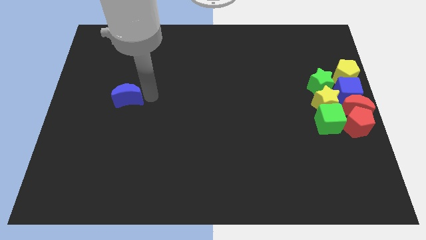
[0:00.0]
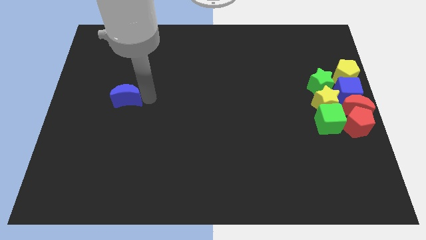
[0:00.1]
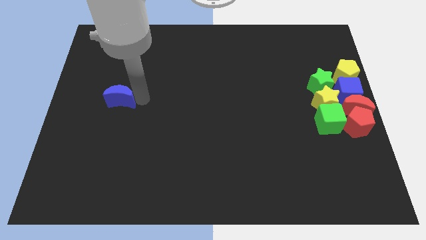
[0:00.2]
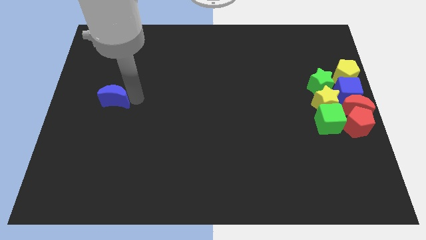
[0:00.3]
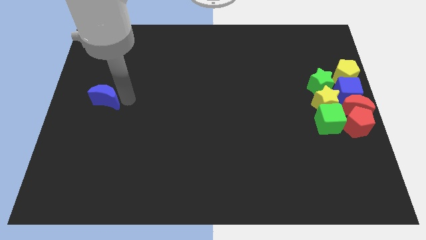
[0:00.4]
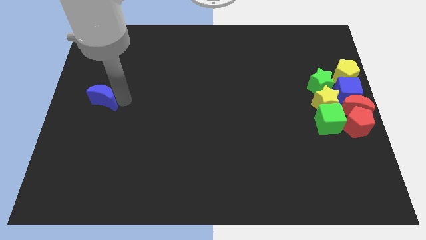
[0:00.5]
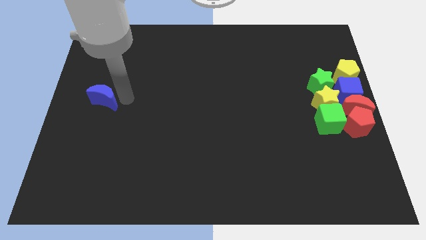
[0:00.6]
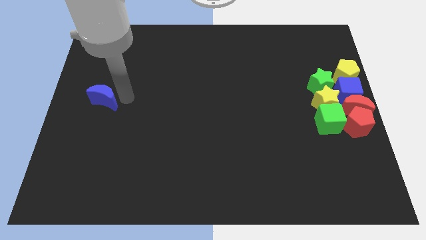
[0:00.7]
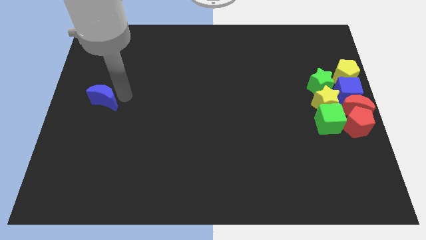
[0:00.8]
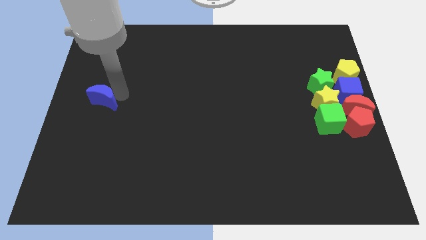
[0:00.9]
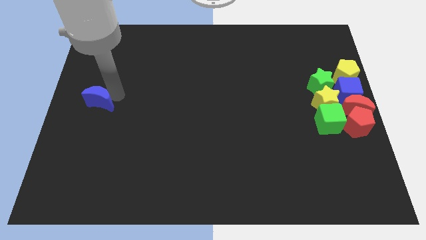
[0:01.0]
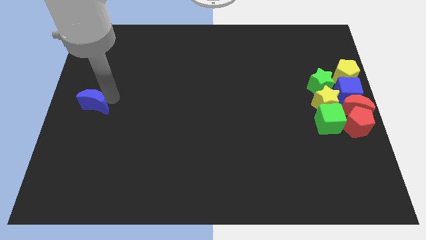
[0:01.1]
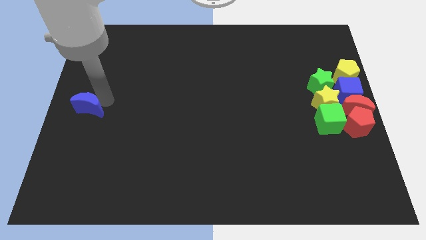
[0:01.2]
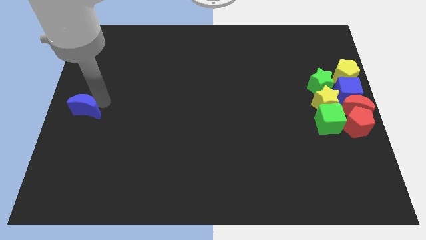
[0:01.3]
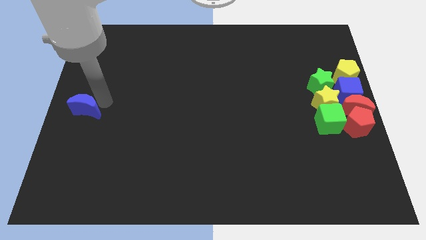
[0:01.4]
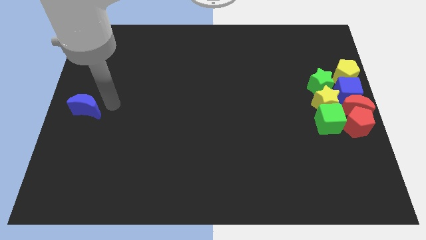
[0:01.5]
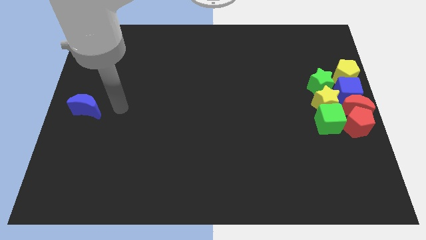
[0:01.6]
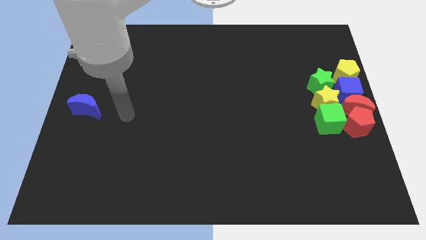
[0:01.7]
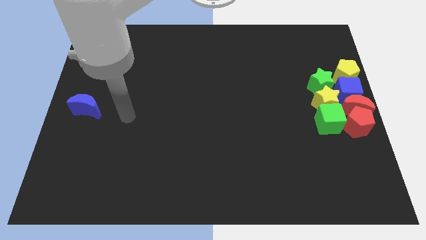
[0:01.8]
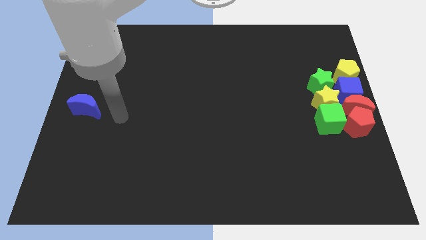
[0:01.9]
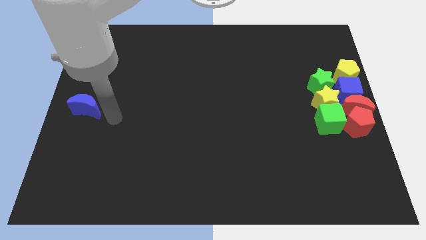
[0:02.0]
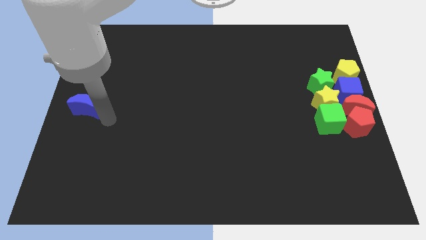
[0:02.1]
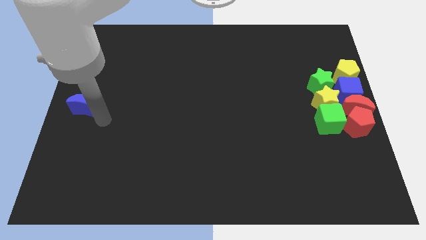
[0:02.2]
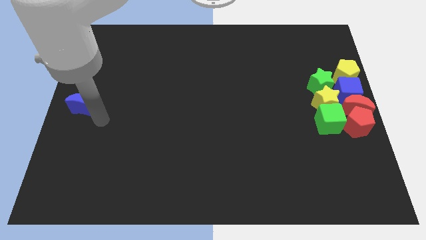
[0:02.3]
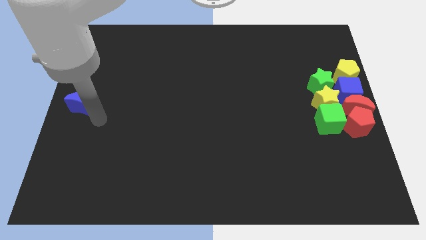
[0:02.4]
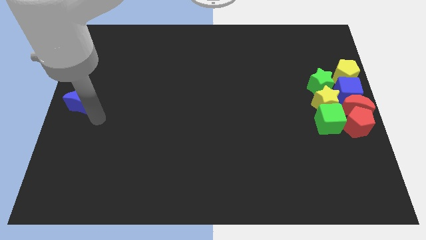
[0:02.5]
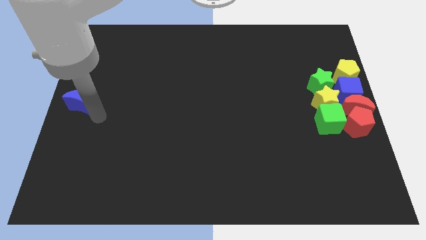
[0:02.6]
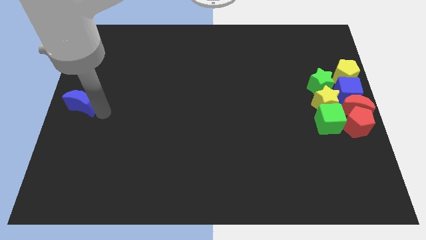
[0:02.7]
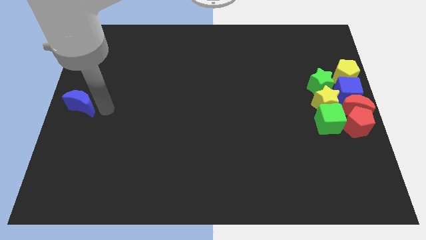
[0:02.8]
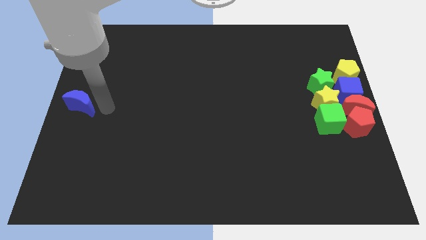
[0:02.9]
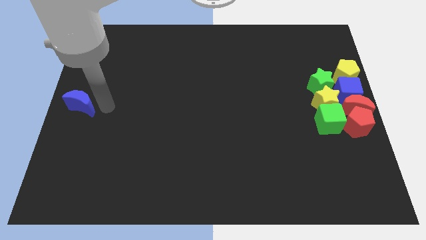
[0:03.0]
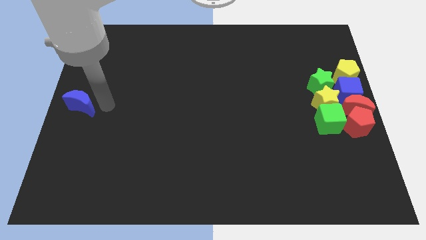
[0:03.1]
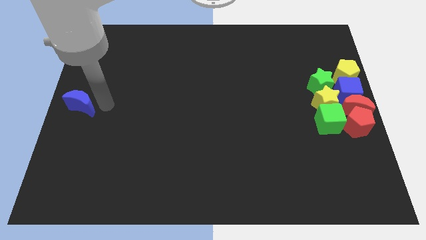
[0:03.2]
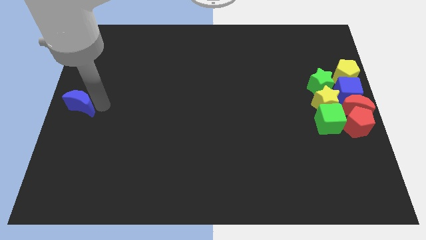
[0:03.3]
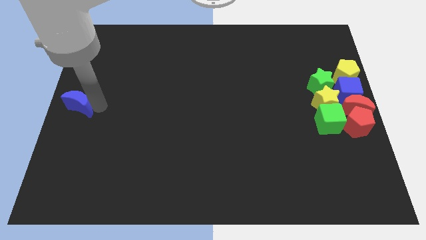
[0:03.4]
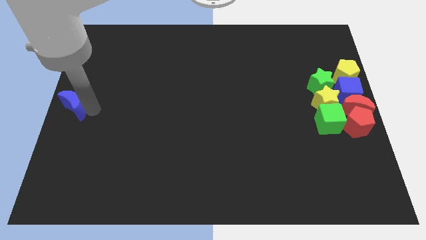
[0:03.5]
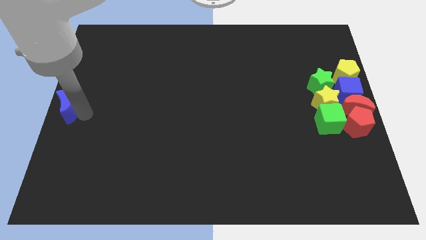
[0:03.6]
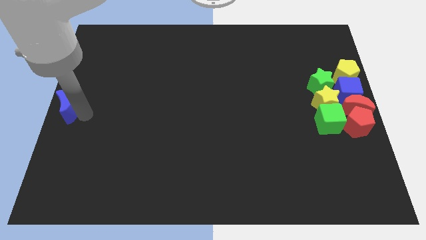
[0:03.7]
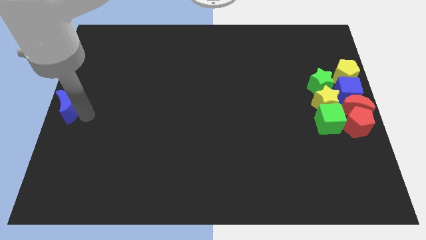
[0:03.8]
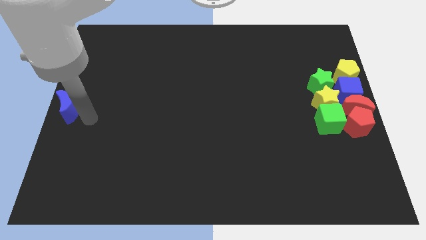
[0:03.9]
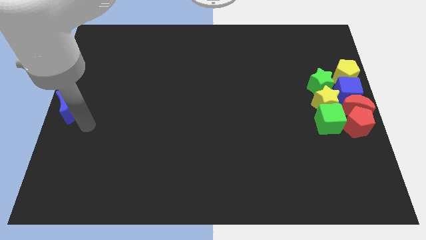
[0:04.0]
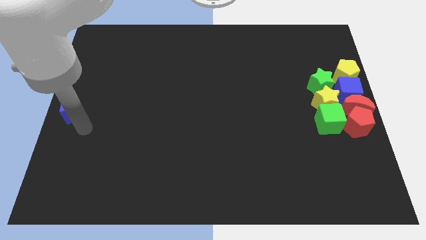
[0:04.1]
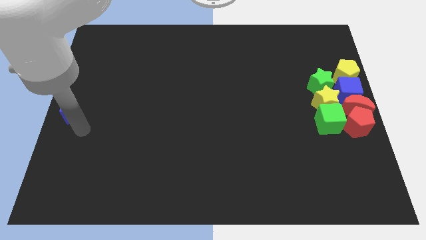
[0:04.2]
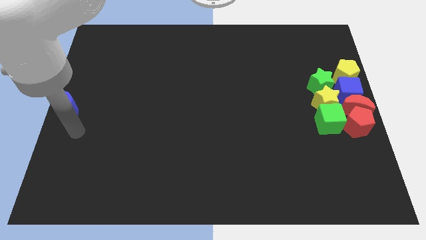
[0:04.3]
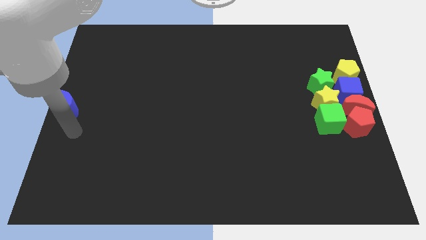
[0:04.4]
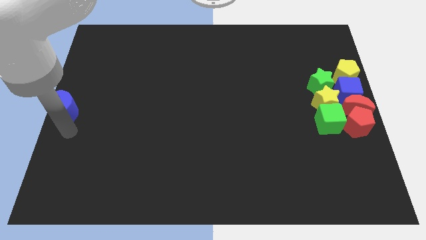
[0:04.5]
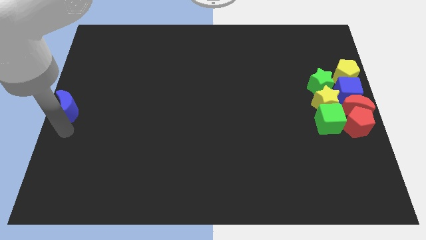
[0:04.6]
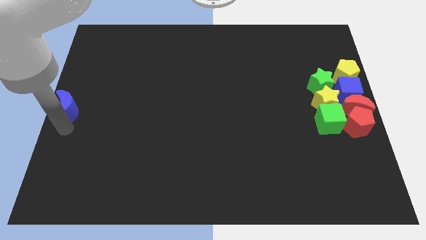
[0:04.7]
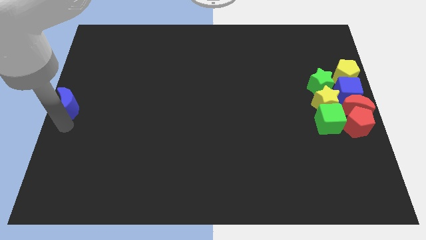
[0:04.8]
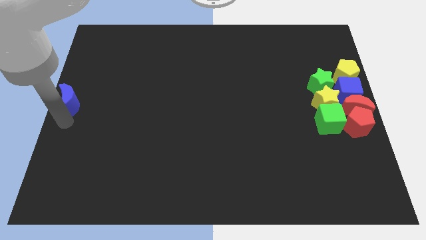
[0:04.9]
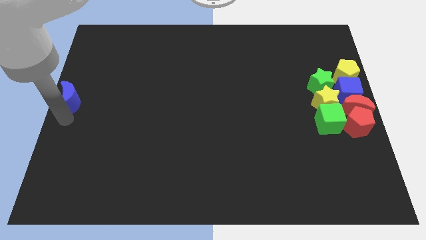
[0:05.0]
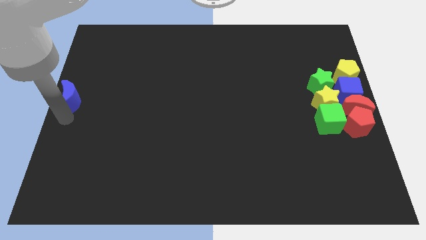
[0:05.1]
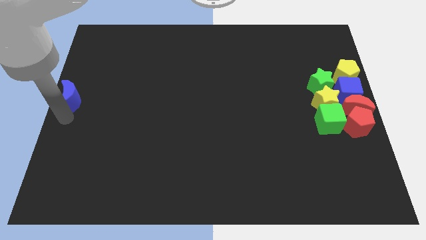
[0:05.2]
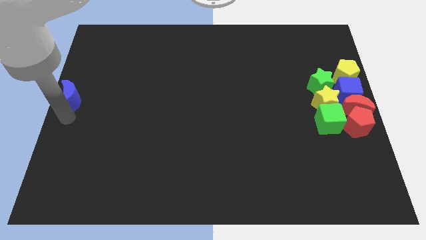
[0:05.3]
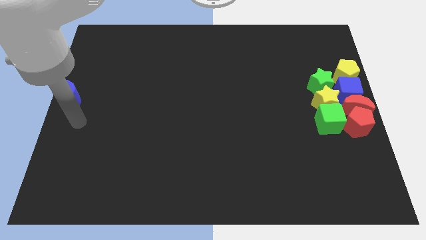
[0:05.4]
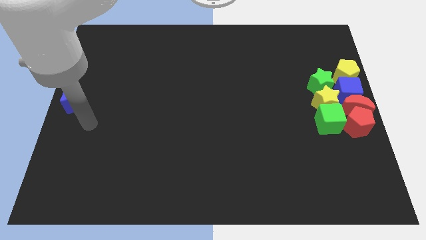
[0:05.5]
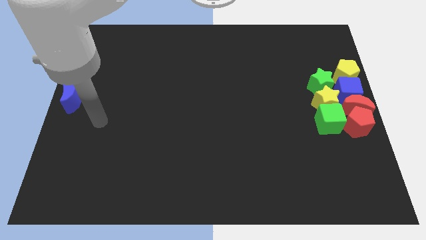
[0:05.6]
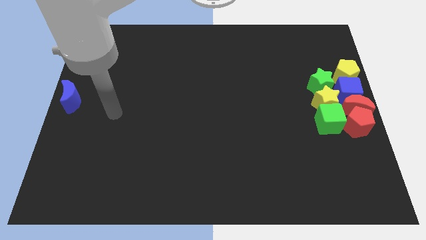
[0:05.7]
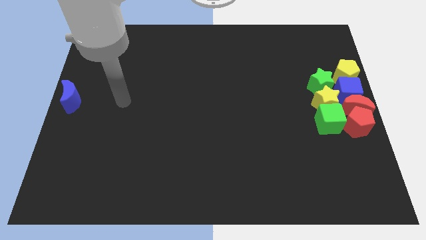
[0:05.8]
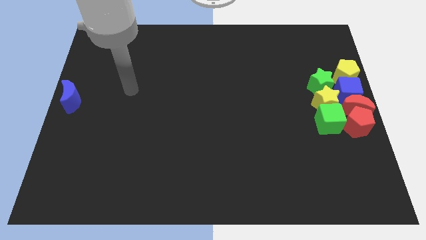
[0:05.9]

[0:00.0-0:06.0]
push blue crescent to the left center of the board

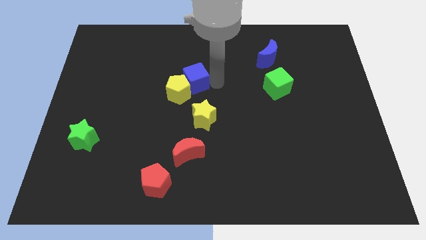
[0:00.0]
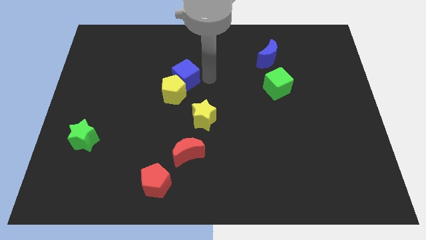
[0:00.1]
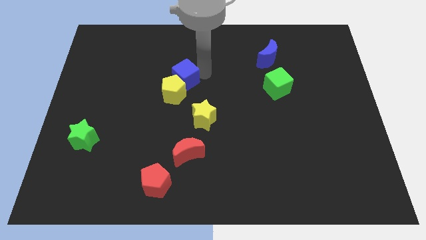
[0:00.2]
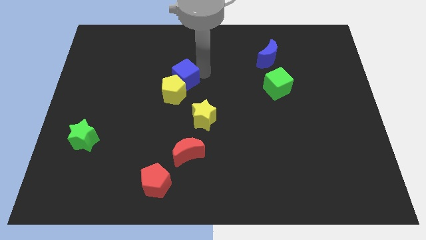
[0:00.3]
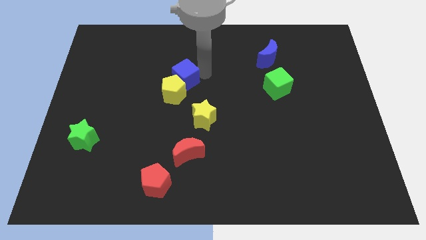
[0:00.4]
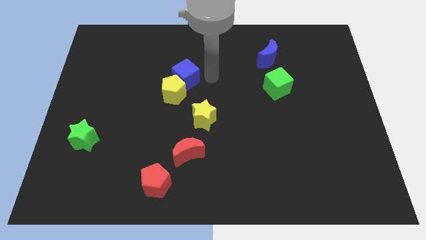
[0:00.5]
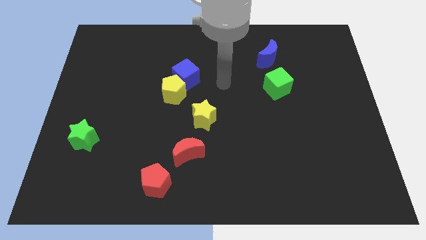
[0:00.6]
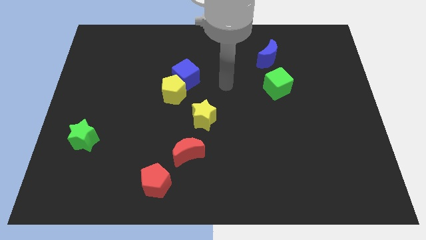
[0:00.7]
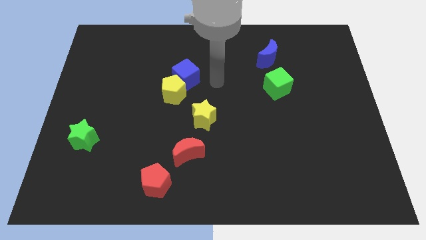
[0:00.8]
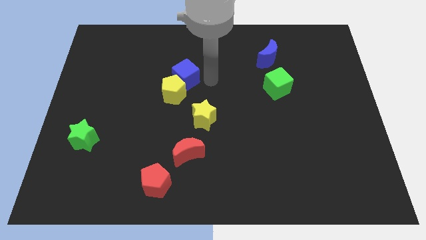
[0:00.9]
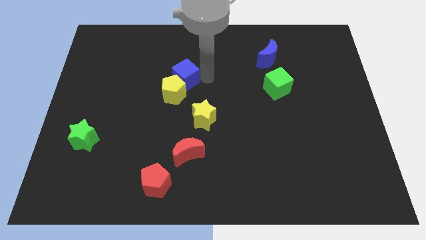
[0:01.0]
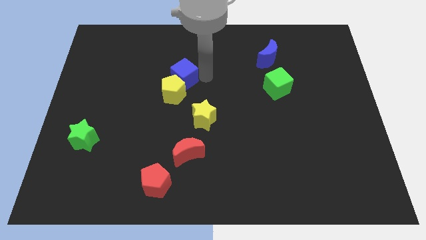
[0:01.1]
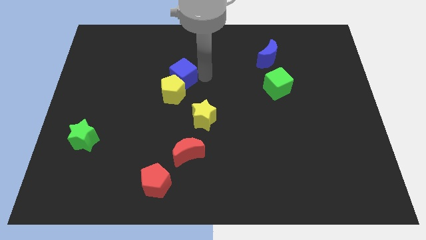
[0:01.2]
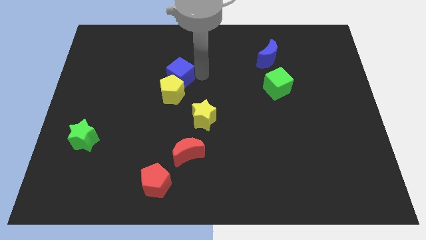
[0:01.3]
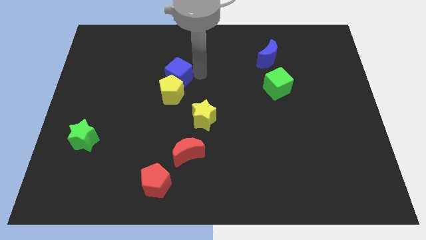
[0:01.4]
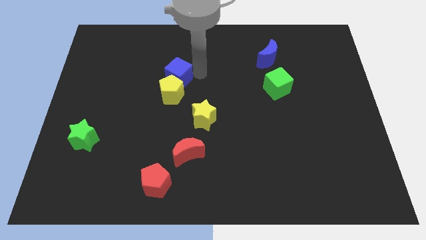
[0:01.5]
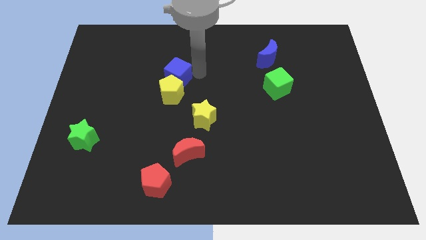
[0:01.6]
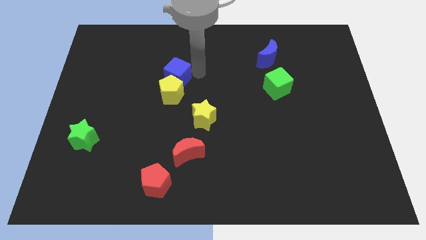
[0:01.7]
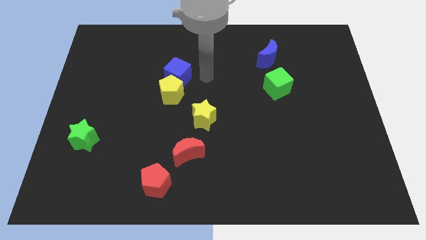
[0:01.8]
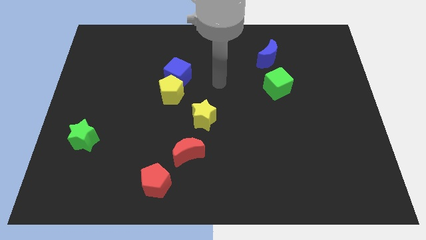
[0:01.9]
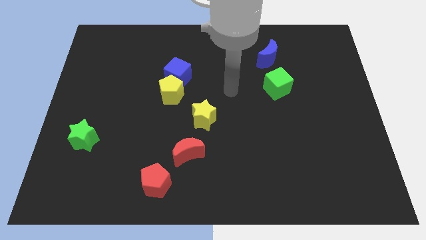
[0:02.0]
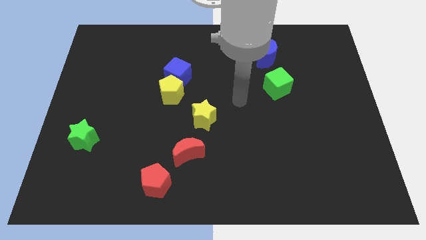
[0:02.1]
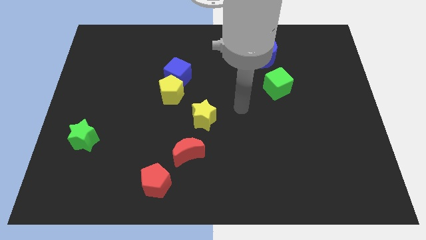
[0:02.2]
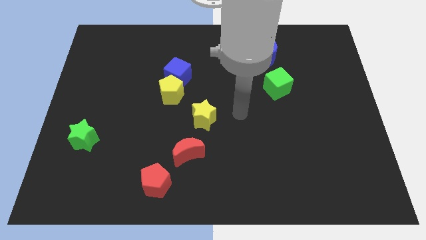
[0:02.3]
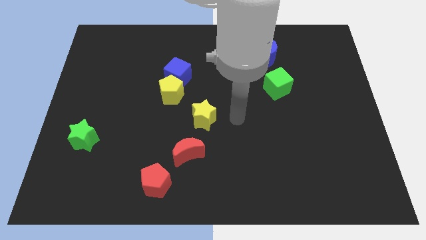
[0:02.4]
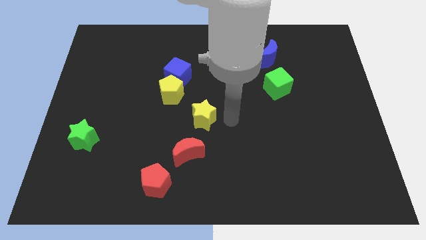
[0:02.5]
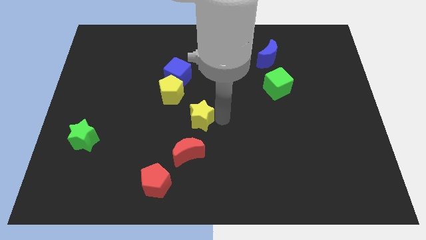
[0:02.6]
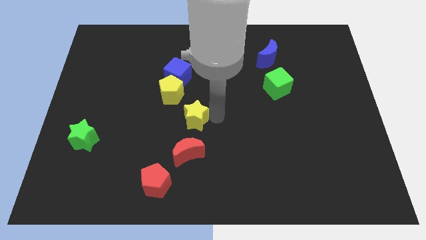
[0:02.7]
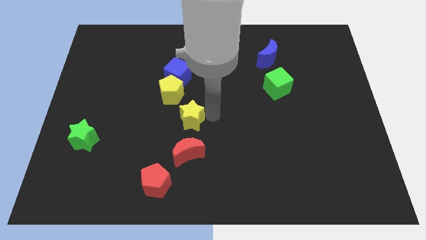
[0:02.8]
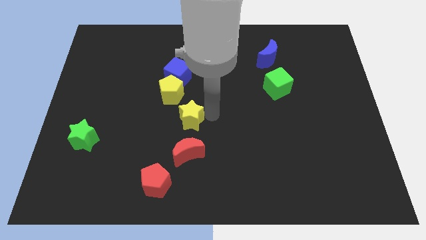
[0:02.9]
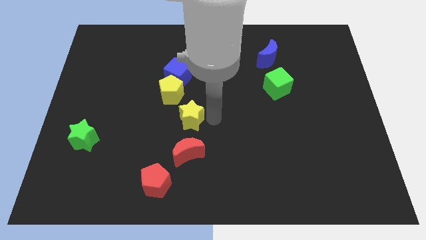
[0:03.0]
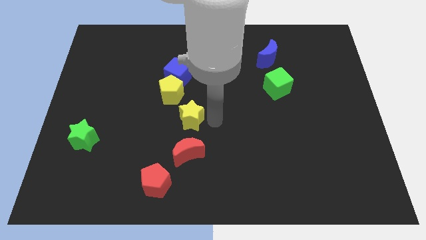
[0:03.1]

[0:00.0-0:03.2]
move the blue cube at the top of yellow pentagon
